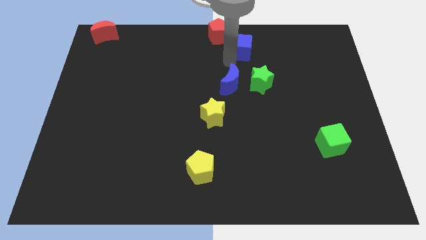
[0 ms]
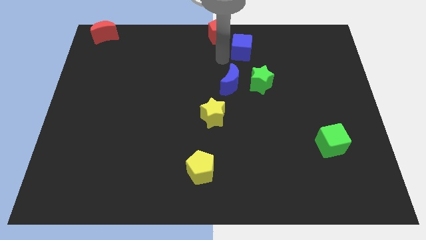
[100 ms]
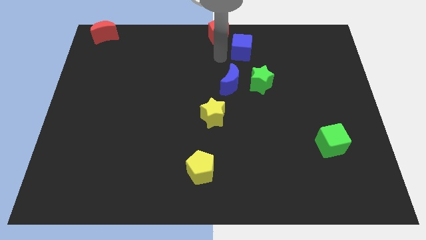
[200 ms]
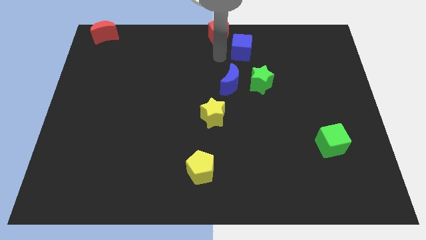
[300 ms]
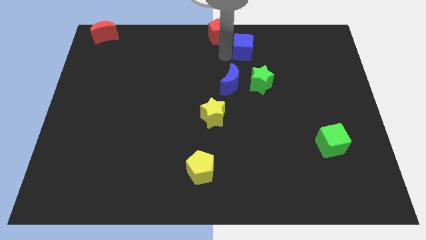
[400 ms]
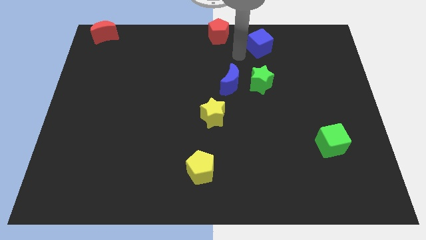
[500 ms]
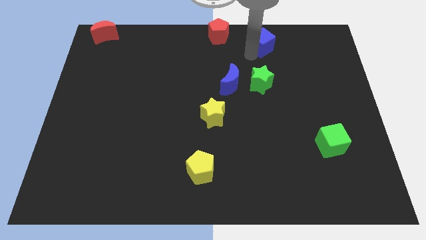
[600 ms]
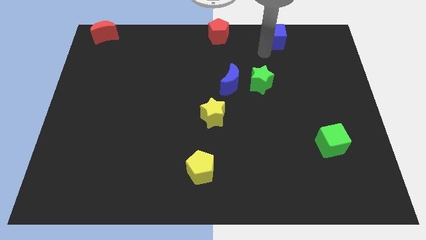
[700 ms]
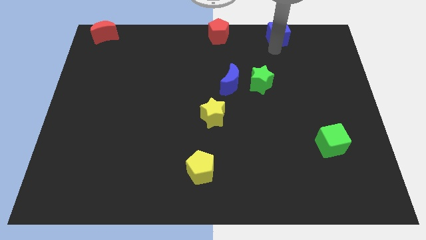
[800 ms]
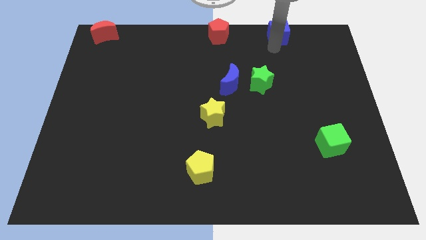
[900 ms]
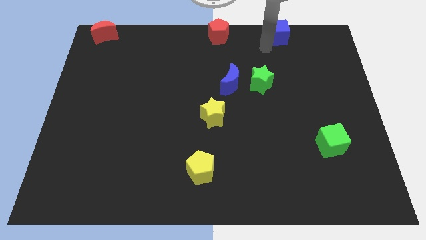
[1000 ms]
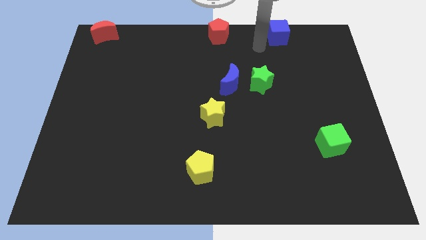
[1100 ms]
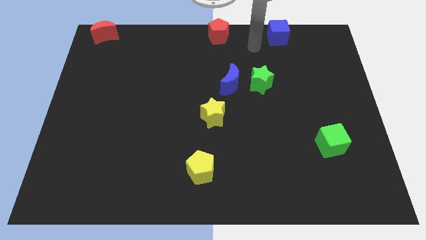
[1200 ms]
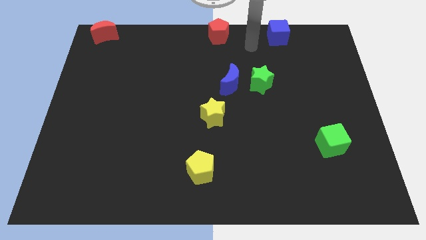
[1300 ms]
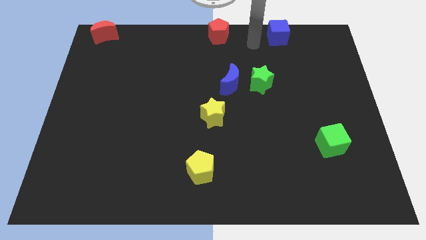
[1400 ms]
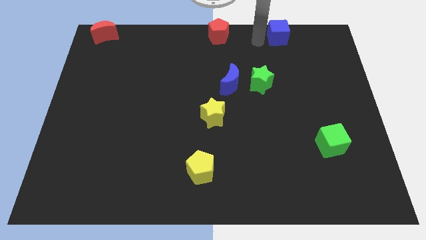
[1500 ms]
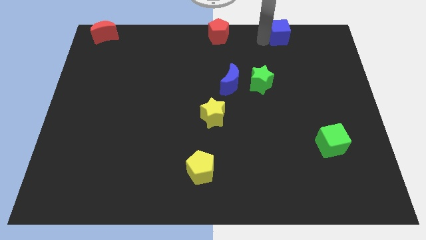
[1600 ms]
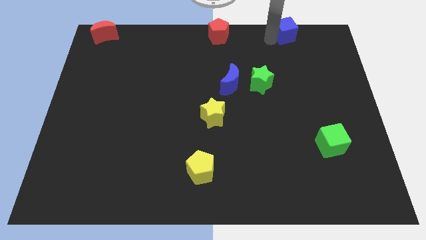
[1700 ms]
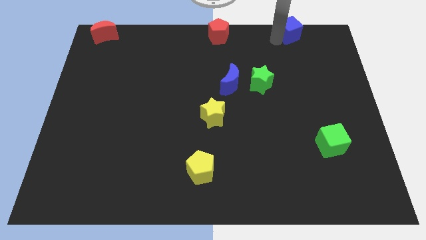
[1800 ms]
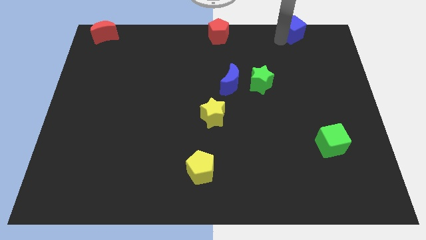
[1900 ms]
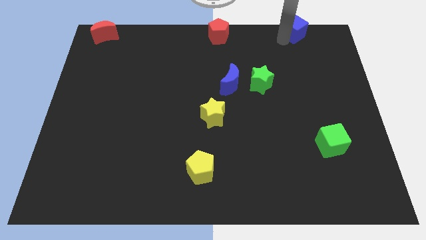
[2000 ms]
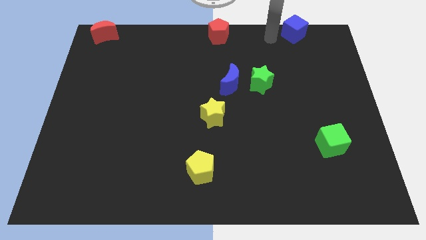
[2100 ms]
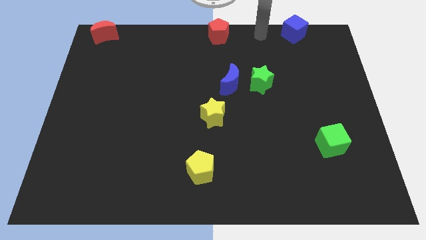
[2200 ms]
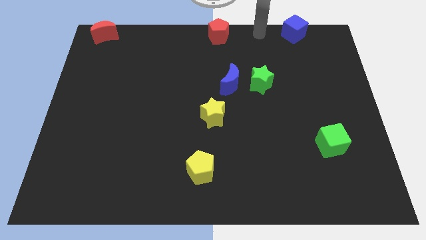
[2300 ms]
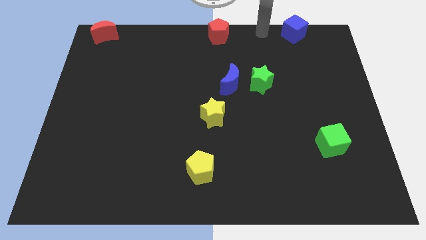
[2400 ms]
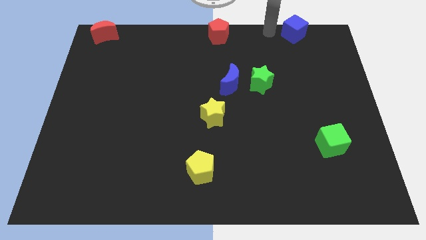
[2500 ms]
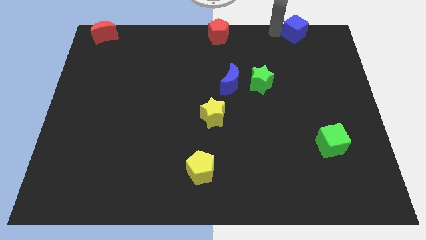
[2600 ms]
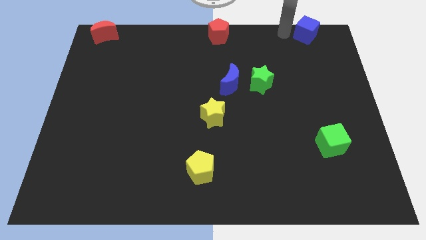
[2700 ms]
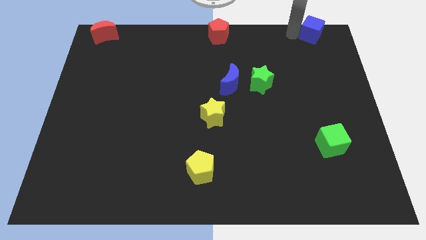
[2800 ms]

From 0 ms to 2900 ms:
move the blue cube to the top right of the green star

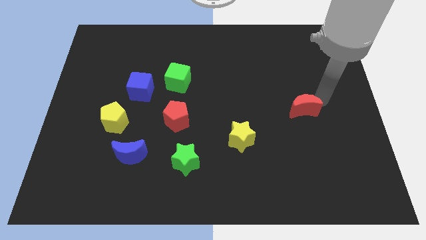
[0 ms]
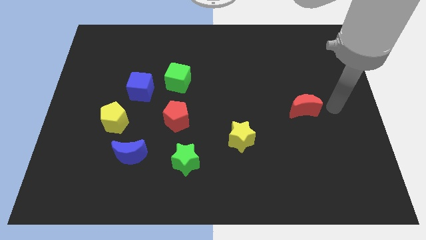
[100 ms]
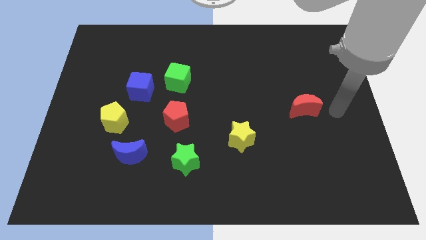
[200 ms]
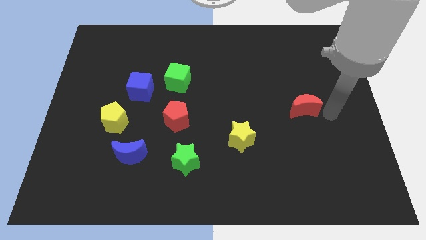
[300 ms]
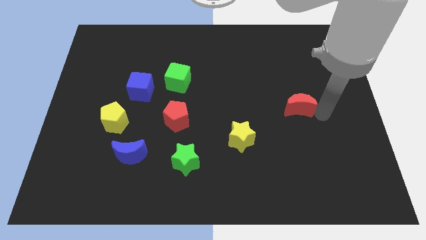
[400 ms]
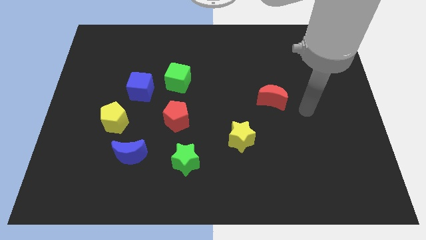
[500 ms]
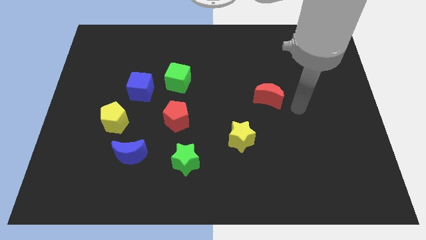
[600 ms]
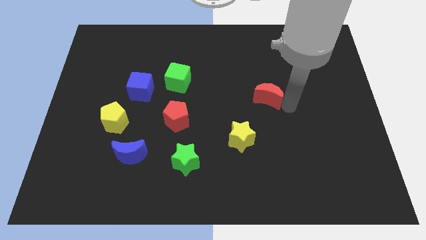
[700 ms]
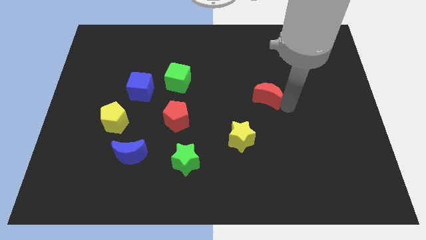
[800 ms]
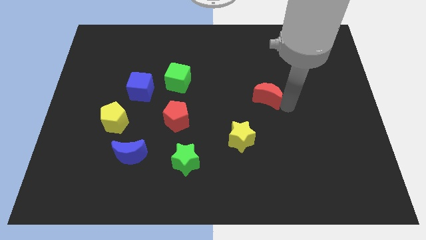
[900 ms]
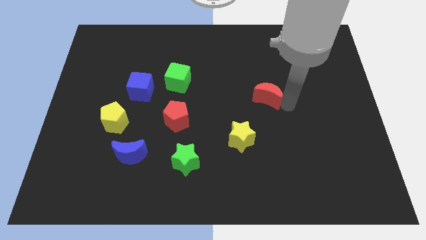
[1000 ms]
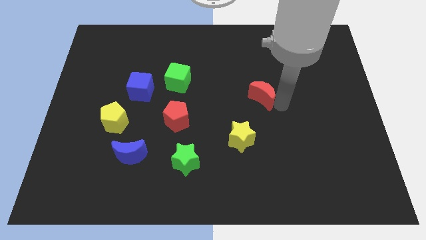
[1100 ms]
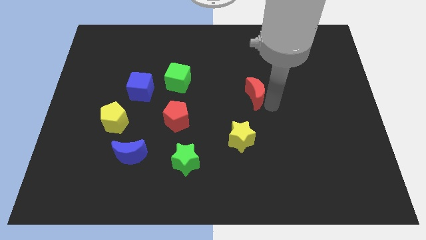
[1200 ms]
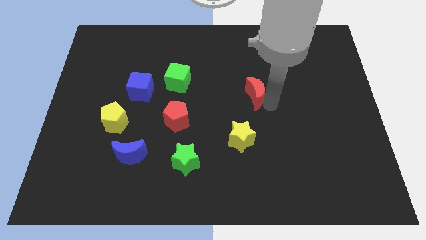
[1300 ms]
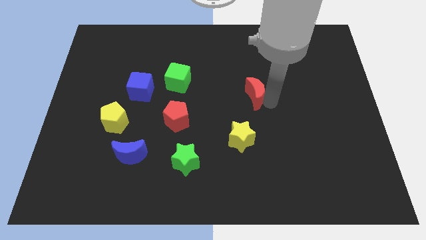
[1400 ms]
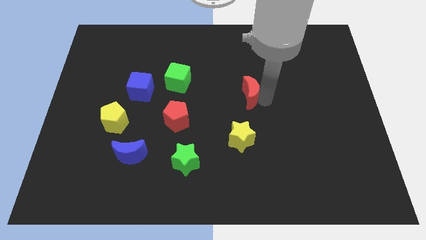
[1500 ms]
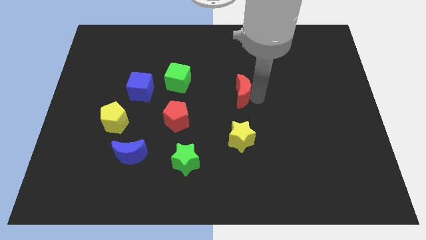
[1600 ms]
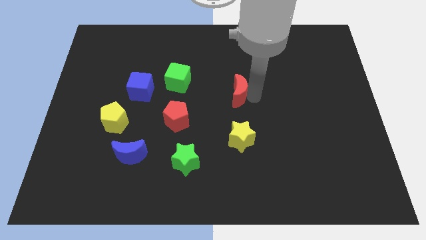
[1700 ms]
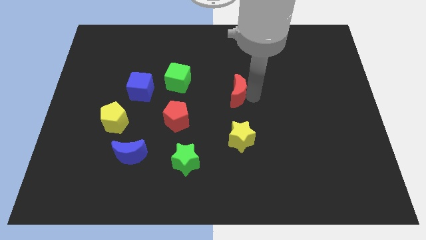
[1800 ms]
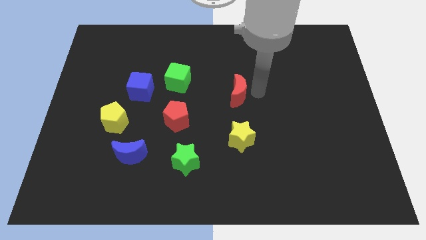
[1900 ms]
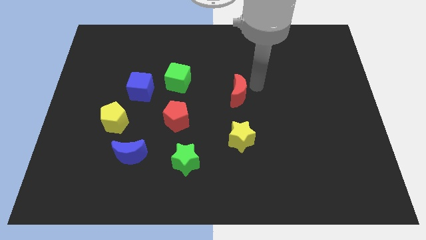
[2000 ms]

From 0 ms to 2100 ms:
place the red crescent at the top of the yellow star

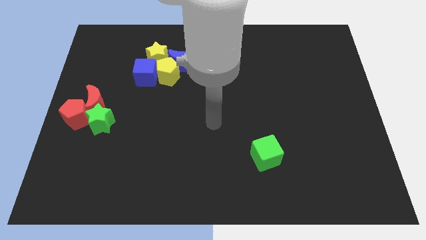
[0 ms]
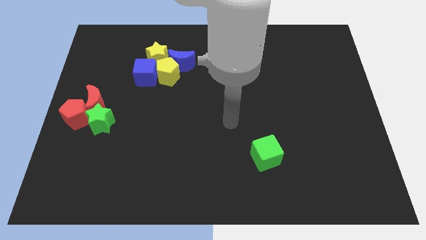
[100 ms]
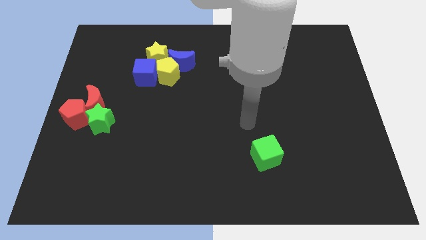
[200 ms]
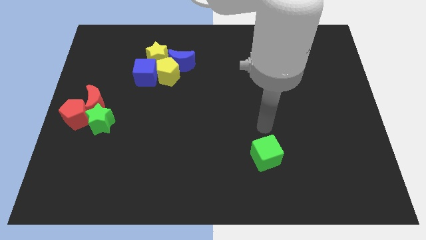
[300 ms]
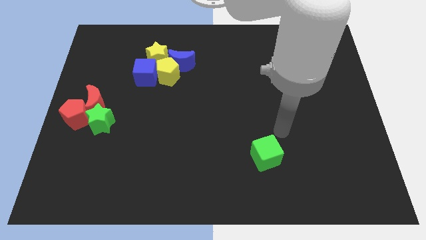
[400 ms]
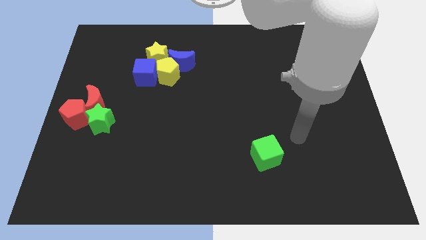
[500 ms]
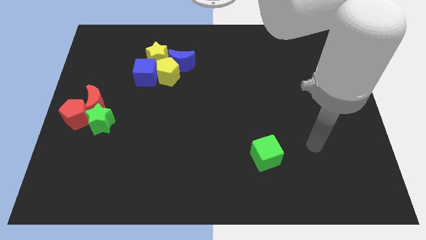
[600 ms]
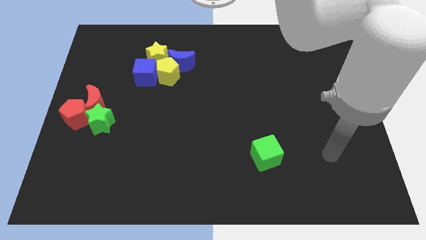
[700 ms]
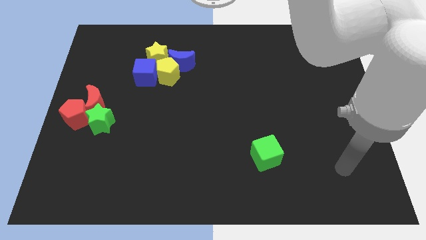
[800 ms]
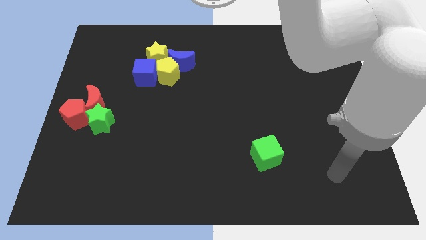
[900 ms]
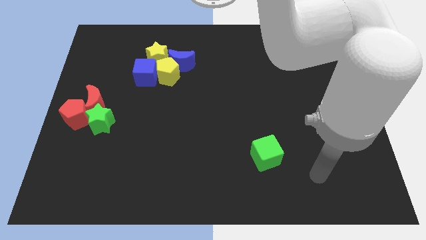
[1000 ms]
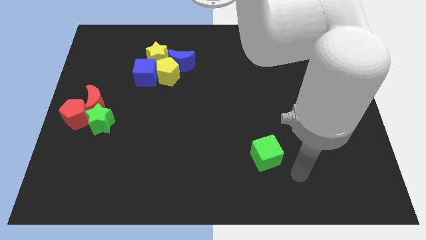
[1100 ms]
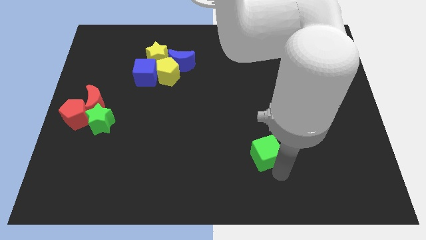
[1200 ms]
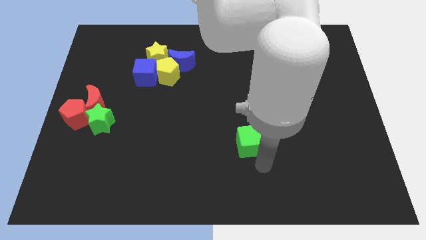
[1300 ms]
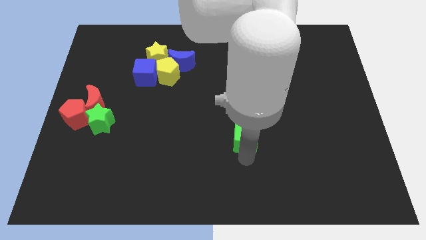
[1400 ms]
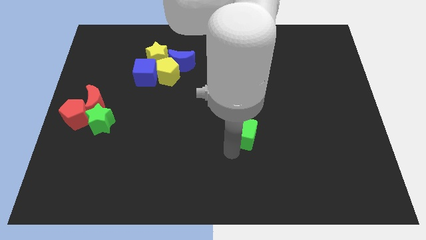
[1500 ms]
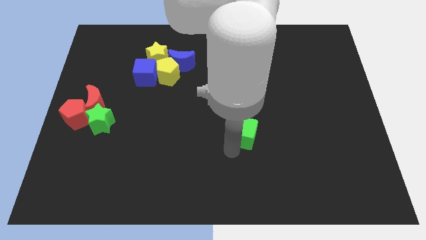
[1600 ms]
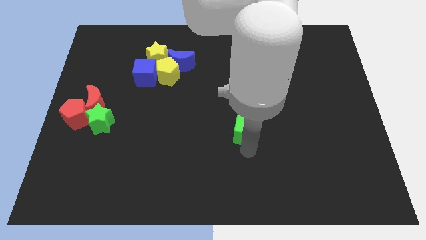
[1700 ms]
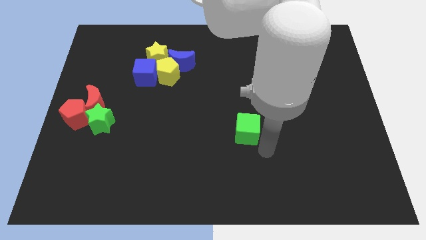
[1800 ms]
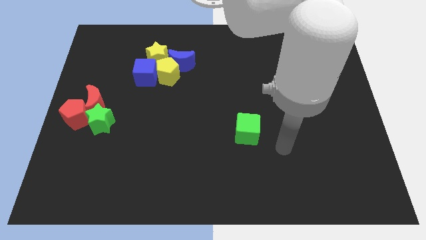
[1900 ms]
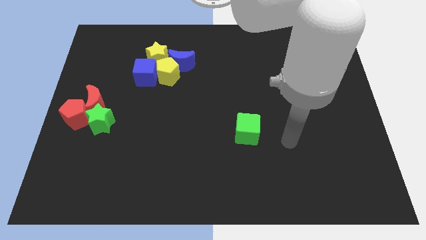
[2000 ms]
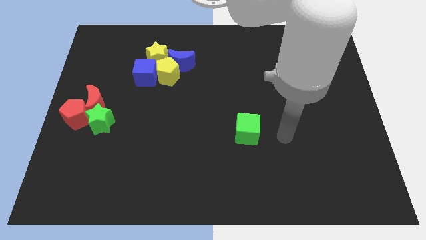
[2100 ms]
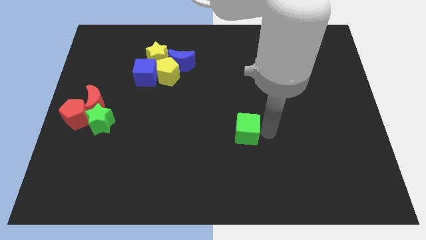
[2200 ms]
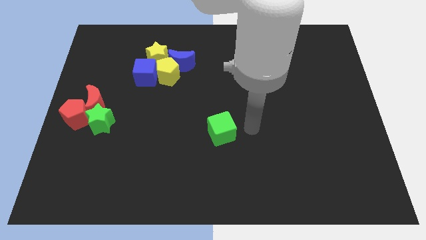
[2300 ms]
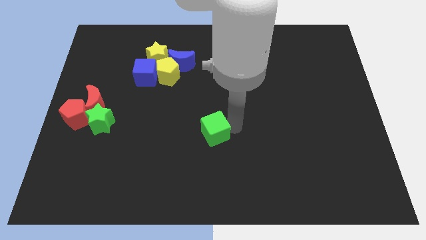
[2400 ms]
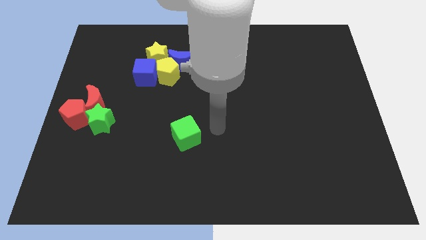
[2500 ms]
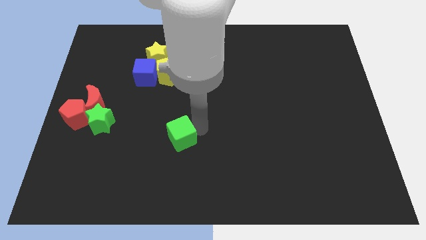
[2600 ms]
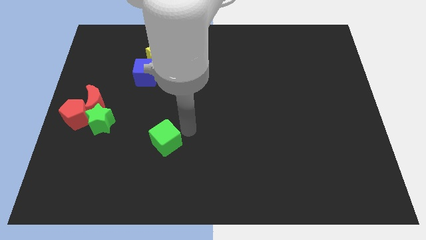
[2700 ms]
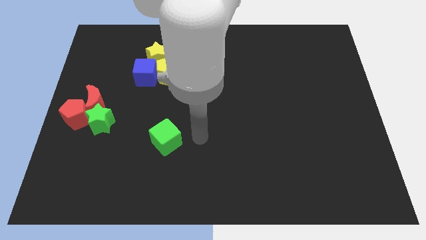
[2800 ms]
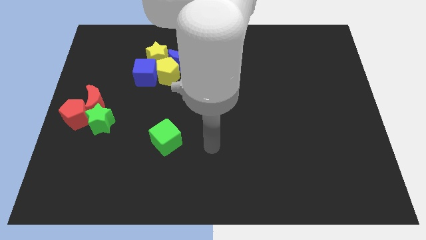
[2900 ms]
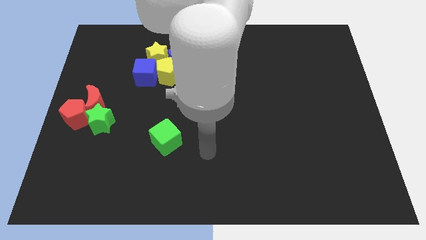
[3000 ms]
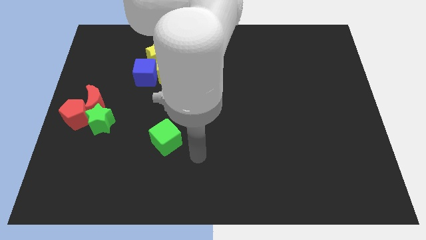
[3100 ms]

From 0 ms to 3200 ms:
move green cube vertically to the yellow pentagon

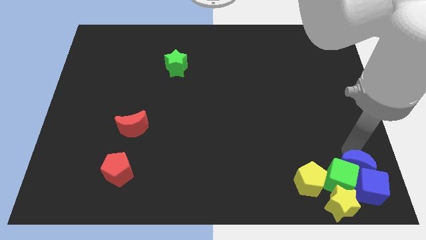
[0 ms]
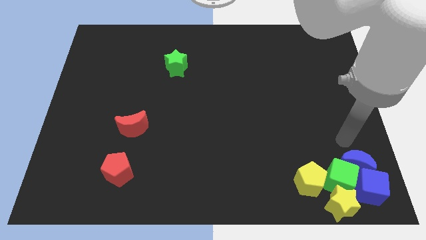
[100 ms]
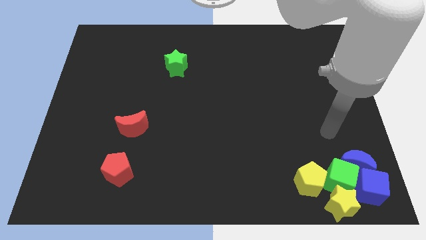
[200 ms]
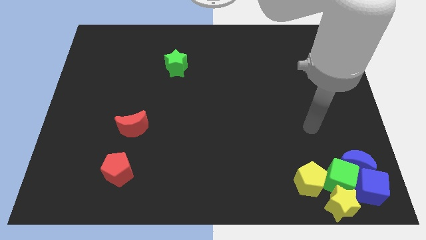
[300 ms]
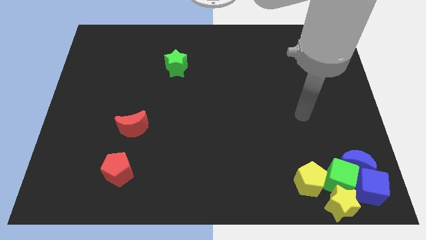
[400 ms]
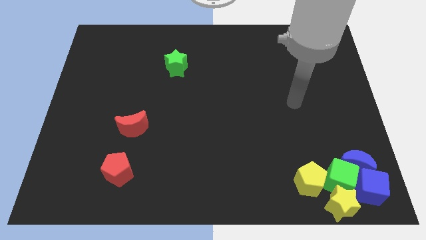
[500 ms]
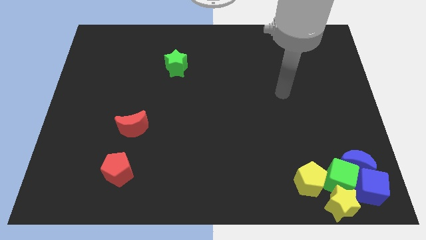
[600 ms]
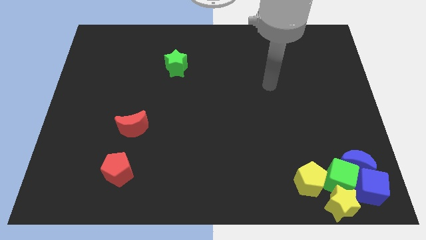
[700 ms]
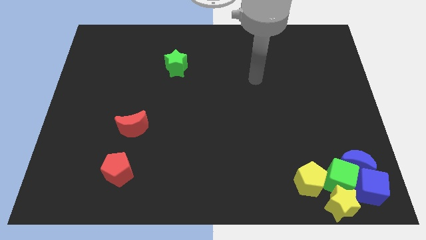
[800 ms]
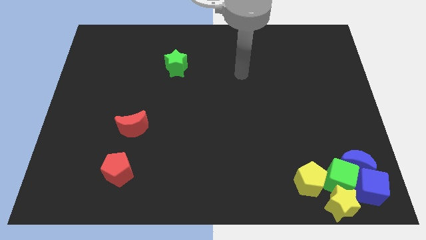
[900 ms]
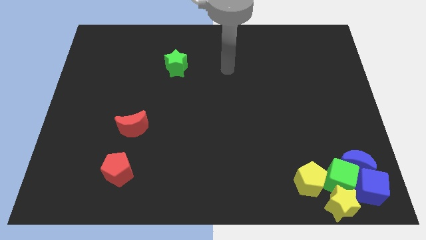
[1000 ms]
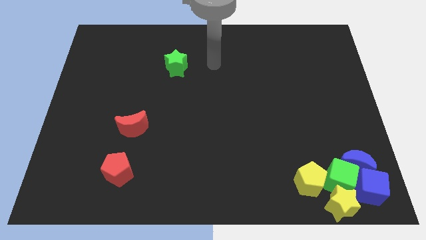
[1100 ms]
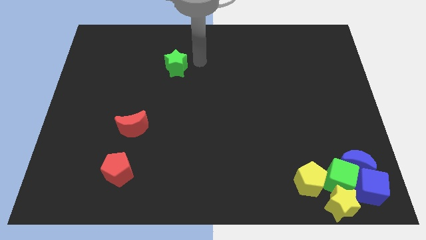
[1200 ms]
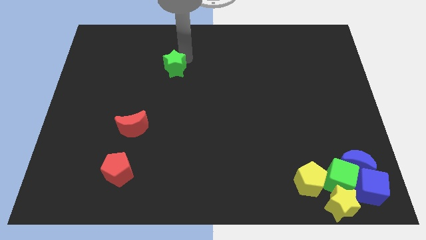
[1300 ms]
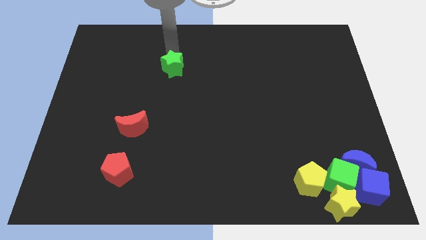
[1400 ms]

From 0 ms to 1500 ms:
place your arm to the top of green star
